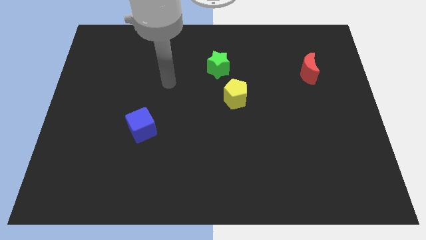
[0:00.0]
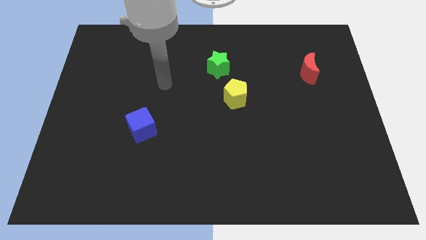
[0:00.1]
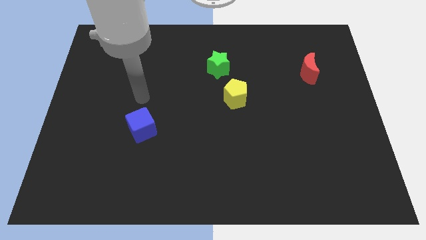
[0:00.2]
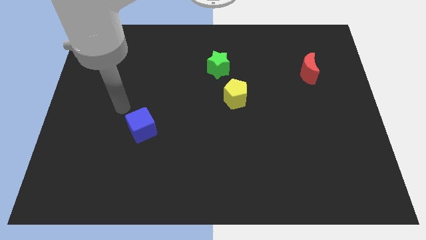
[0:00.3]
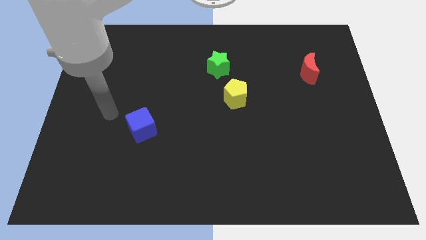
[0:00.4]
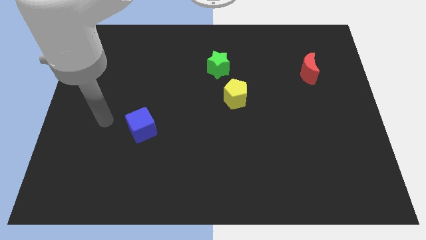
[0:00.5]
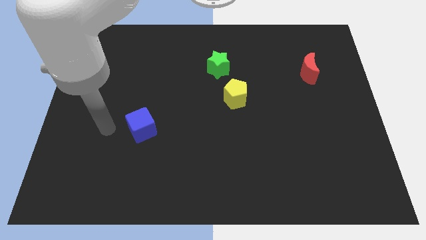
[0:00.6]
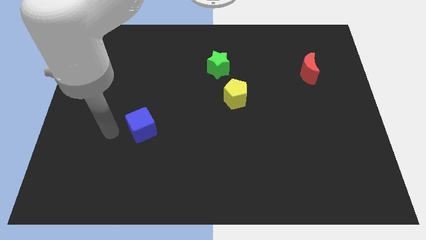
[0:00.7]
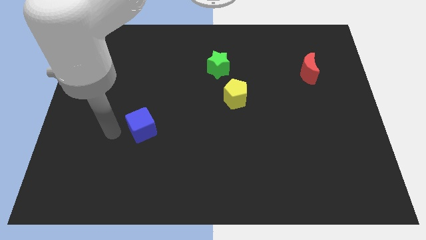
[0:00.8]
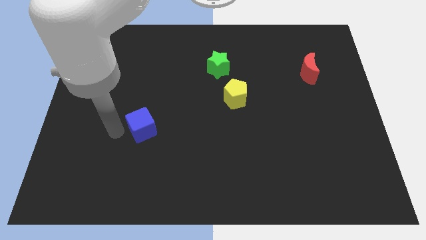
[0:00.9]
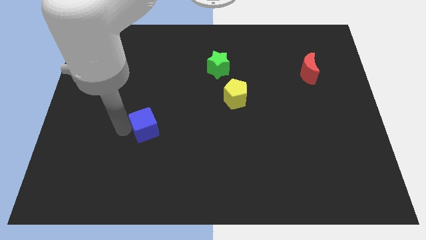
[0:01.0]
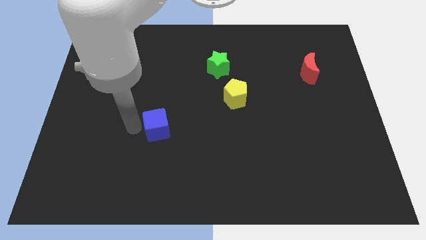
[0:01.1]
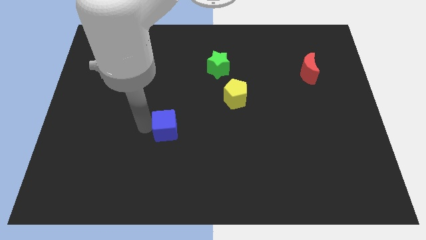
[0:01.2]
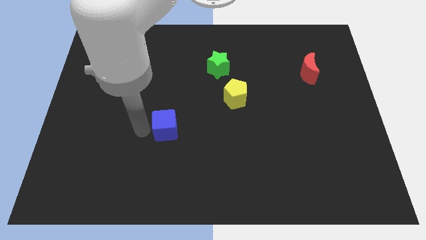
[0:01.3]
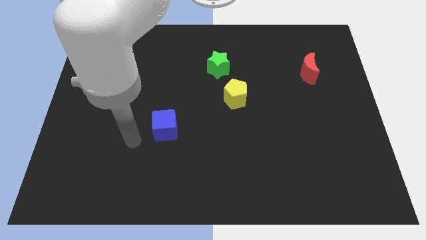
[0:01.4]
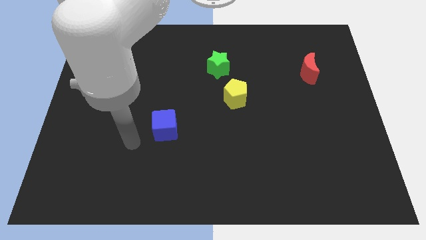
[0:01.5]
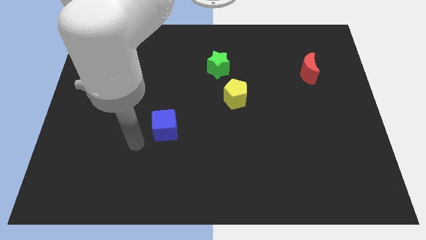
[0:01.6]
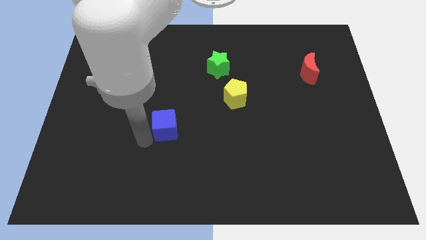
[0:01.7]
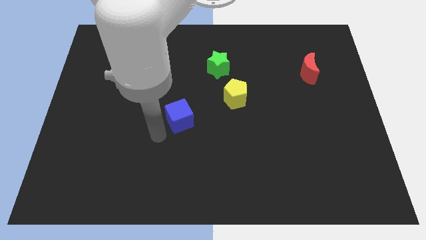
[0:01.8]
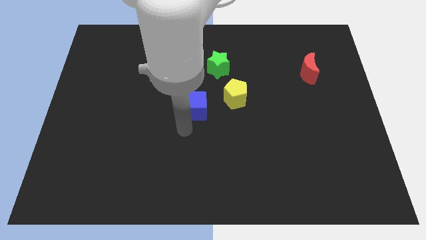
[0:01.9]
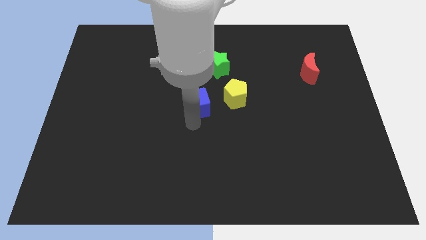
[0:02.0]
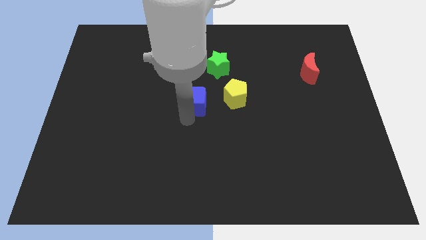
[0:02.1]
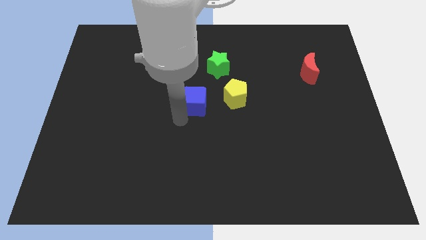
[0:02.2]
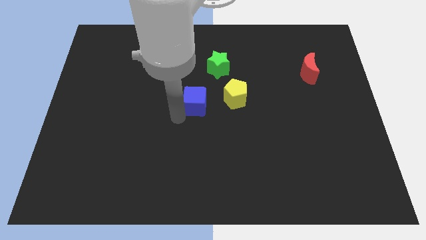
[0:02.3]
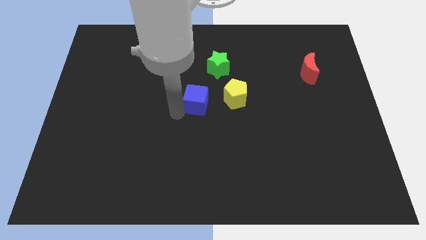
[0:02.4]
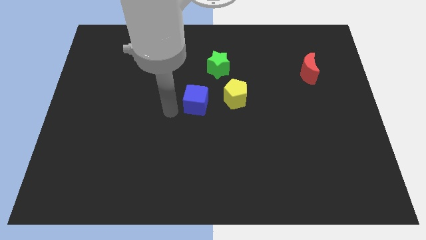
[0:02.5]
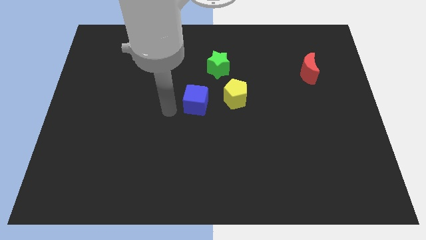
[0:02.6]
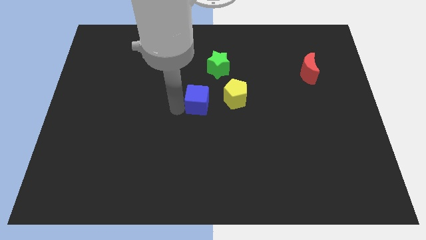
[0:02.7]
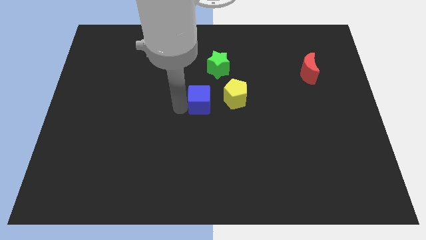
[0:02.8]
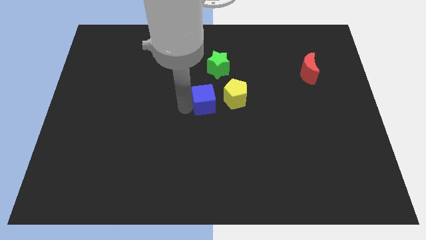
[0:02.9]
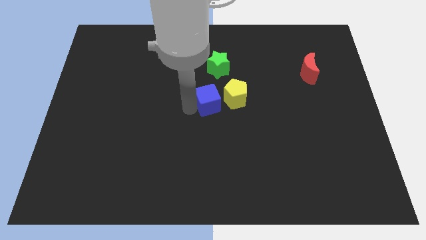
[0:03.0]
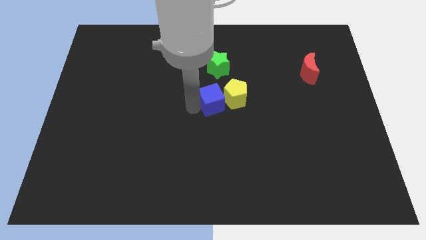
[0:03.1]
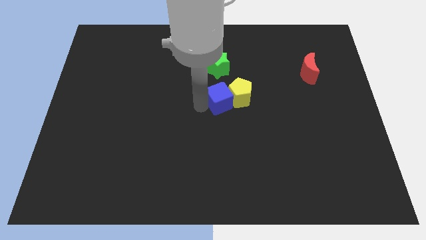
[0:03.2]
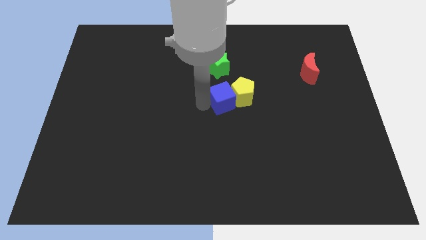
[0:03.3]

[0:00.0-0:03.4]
slide the blue block close to the yellow pentagon

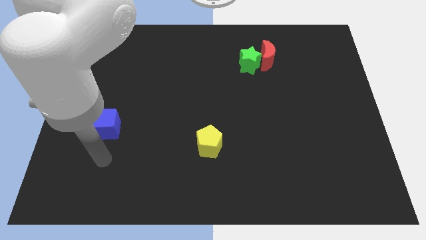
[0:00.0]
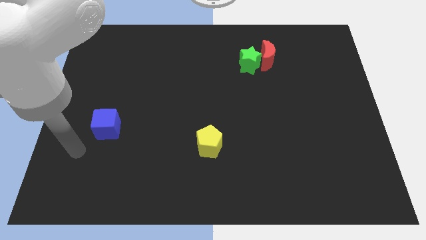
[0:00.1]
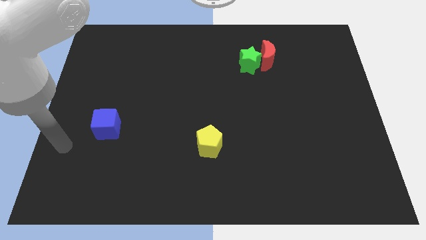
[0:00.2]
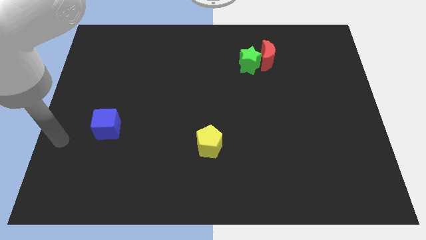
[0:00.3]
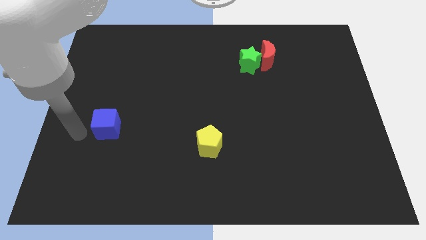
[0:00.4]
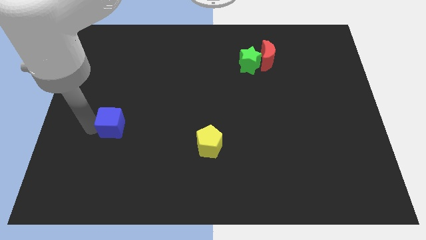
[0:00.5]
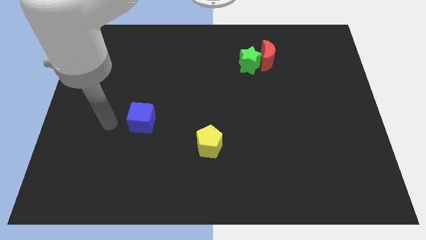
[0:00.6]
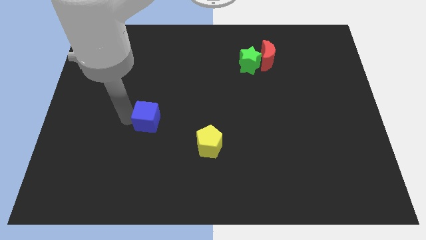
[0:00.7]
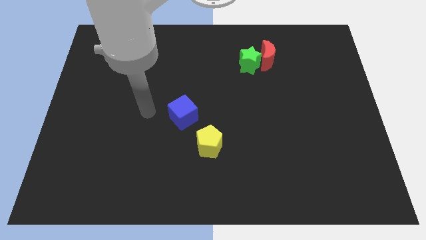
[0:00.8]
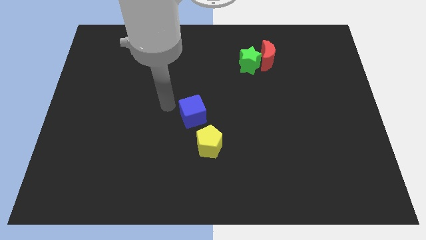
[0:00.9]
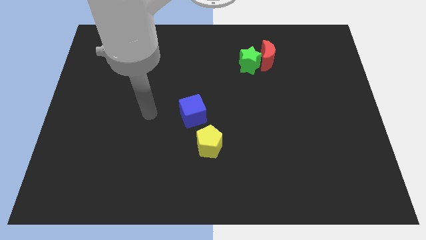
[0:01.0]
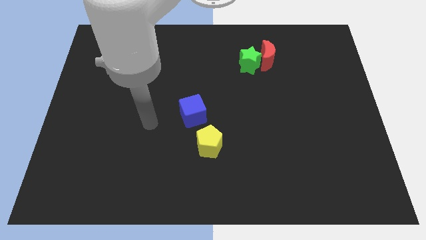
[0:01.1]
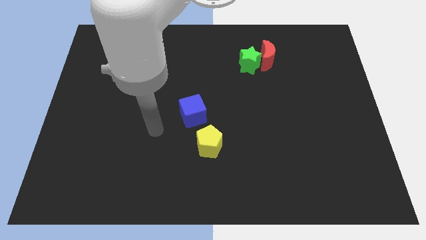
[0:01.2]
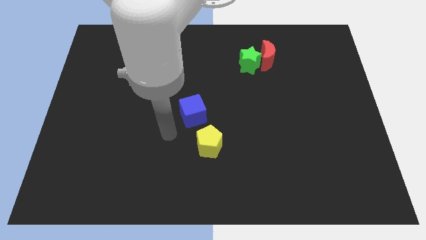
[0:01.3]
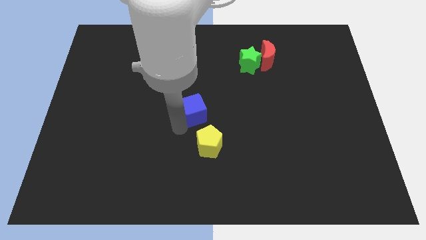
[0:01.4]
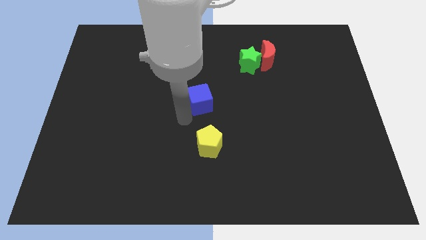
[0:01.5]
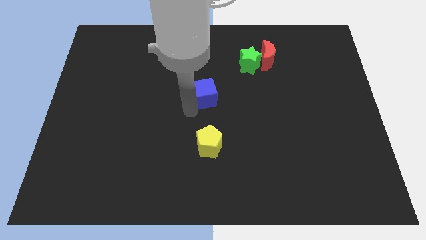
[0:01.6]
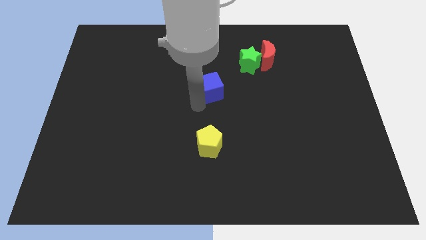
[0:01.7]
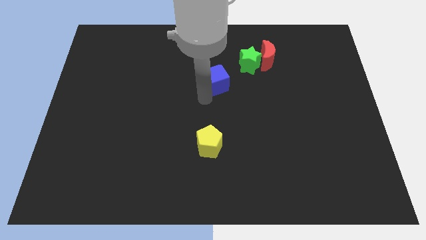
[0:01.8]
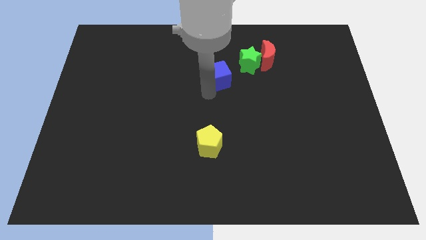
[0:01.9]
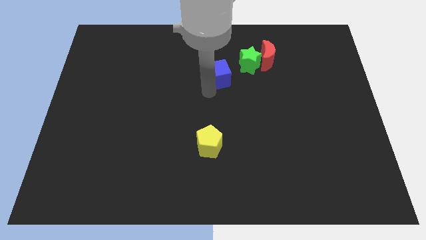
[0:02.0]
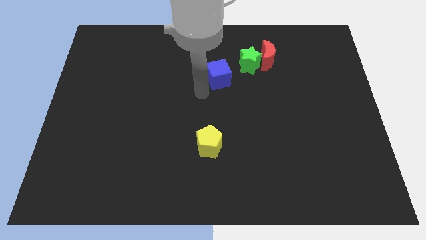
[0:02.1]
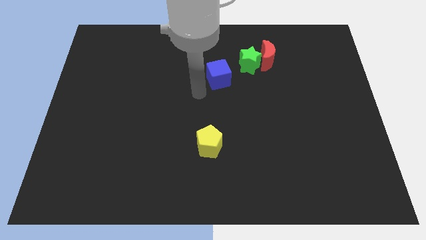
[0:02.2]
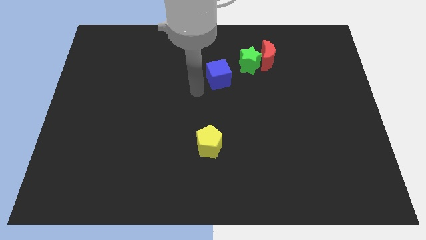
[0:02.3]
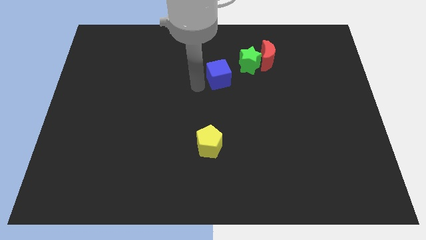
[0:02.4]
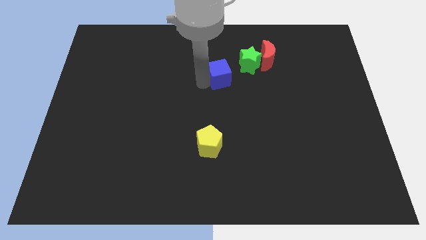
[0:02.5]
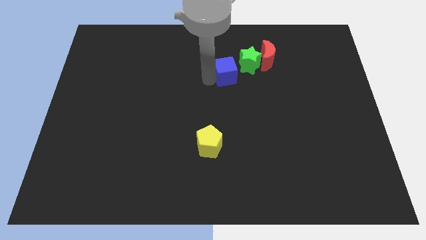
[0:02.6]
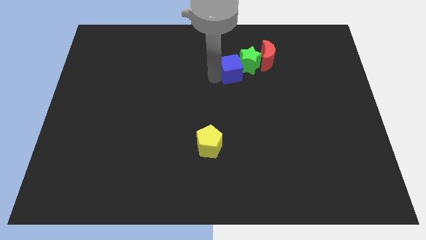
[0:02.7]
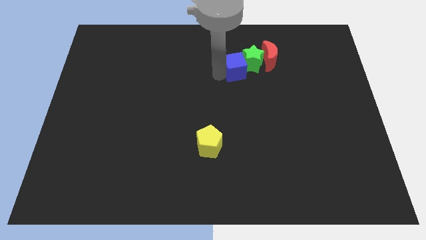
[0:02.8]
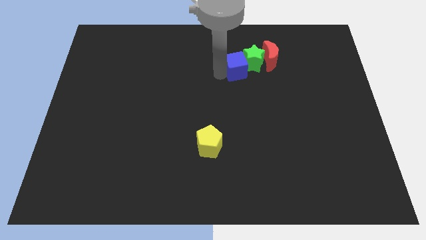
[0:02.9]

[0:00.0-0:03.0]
move the cube next to the star

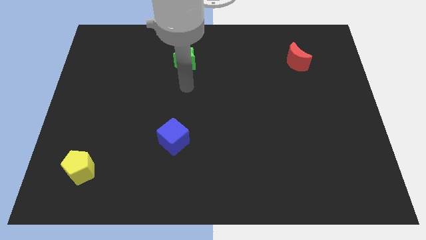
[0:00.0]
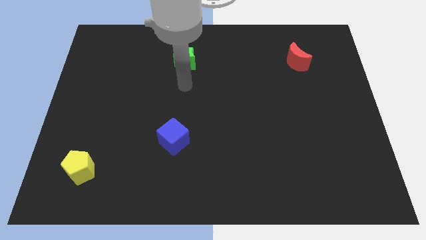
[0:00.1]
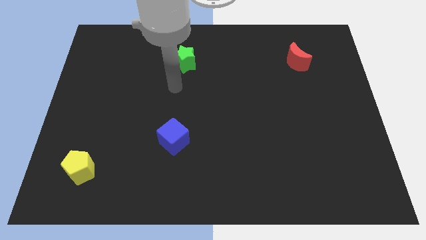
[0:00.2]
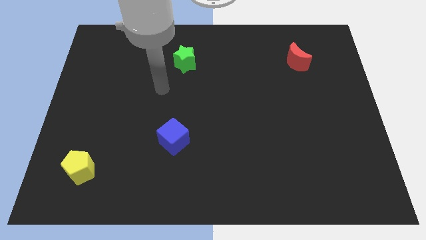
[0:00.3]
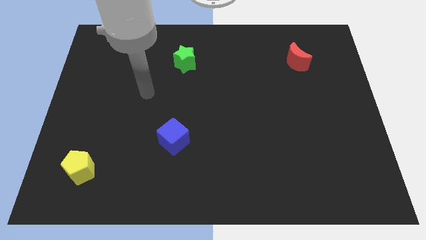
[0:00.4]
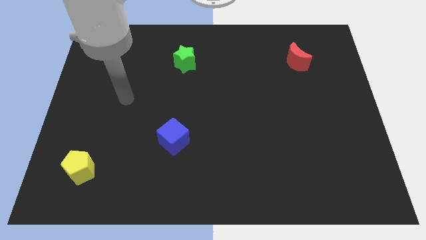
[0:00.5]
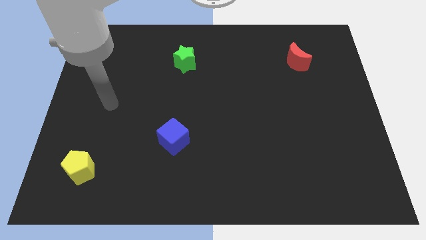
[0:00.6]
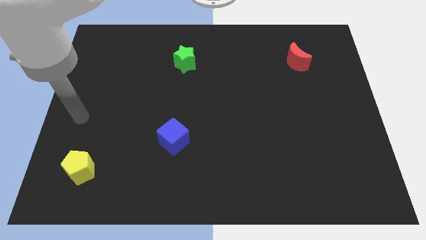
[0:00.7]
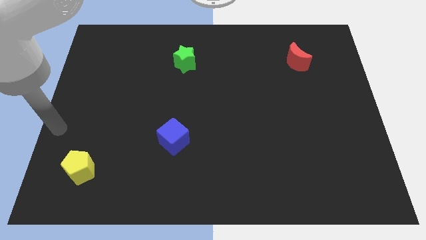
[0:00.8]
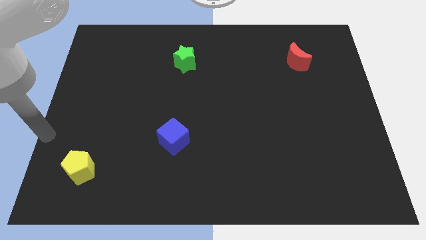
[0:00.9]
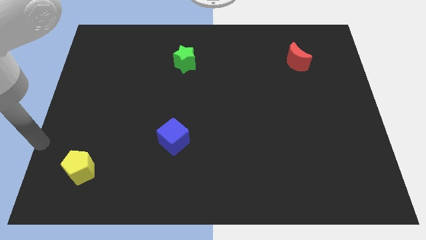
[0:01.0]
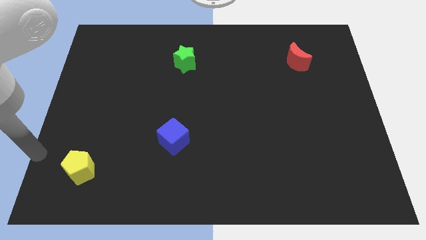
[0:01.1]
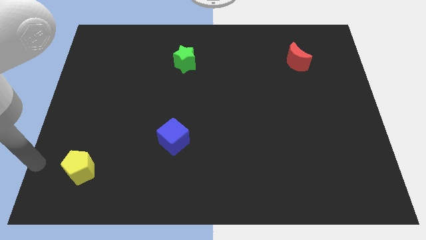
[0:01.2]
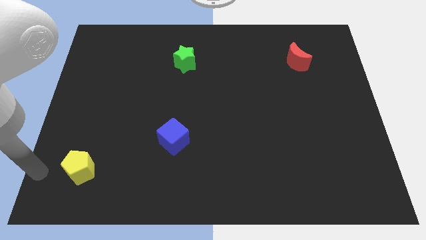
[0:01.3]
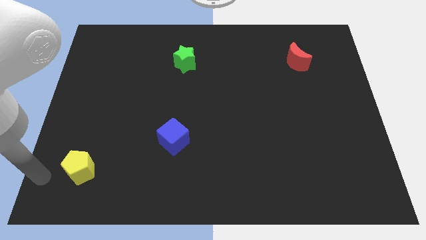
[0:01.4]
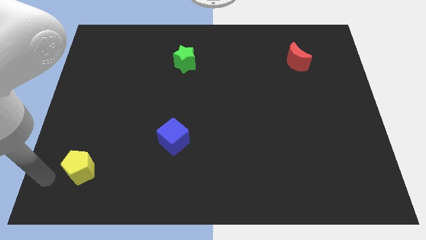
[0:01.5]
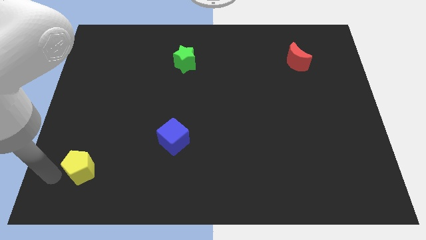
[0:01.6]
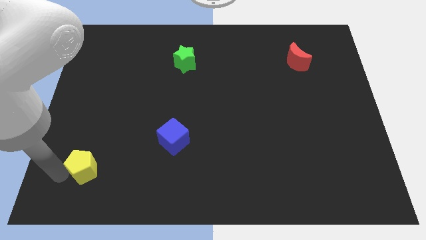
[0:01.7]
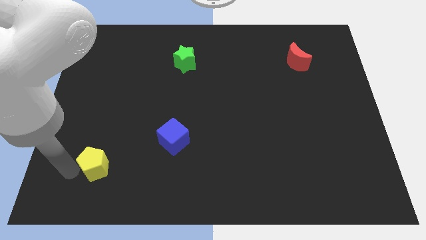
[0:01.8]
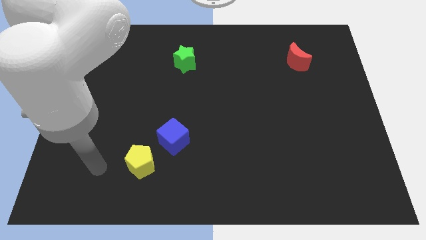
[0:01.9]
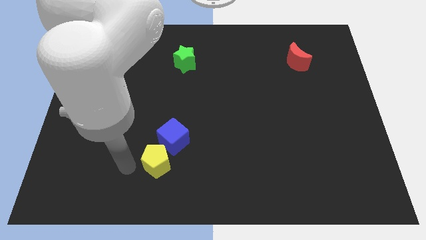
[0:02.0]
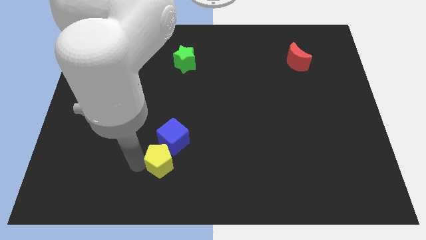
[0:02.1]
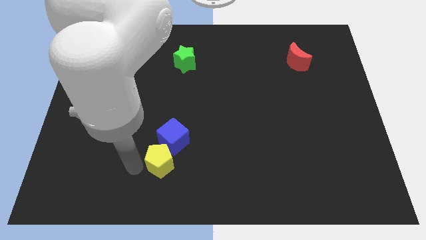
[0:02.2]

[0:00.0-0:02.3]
put the pentagon towards the blue block
